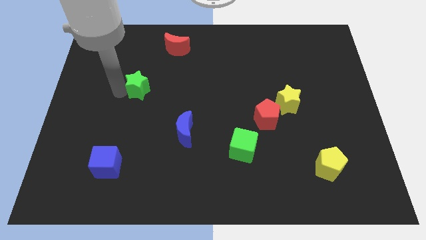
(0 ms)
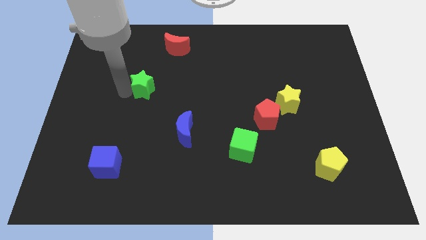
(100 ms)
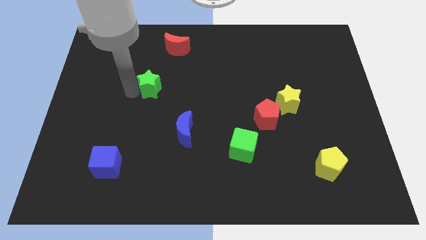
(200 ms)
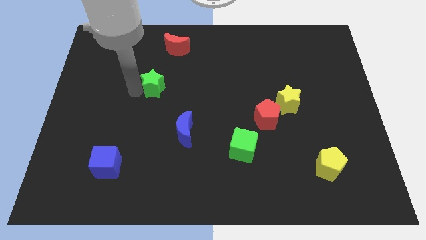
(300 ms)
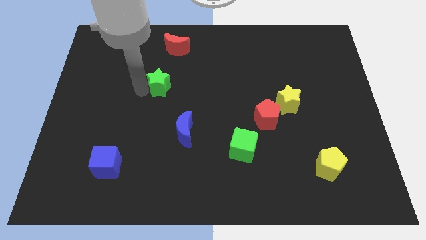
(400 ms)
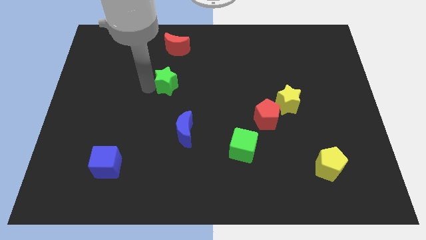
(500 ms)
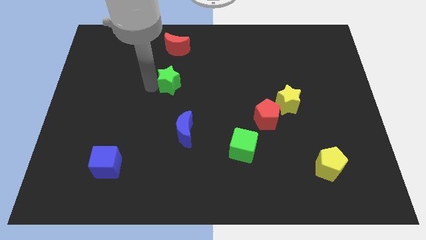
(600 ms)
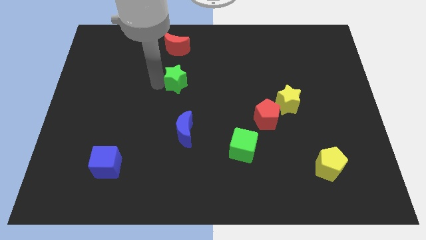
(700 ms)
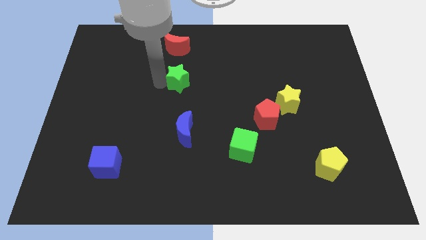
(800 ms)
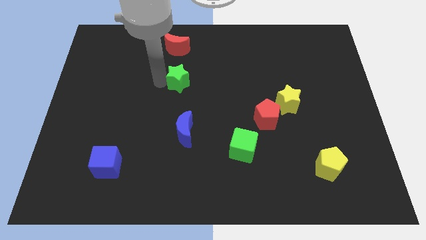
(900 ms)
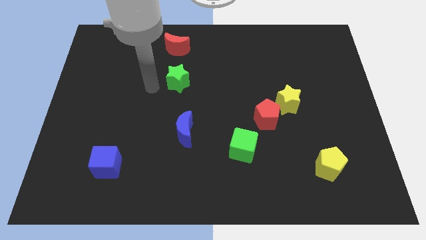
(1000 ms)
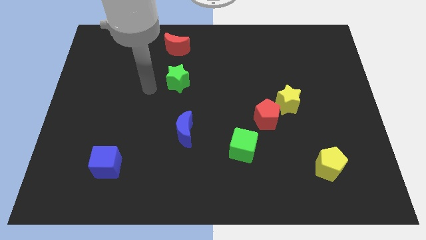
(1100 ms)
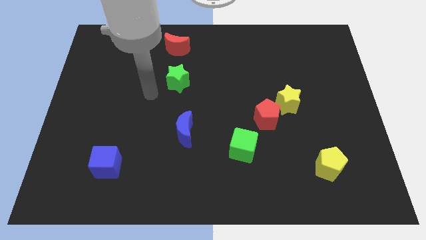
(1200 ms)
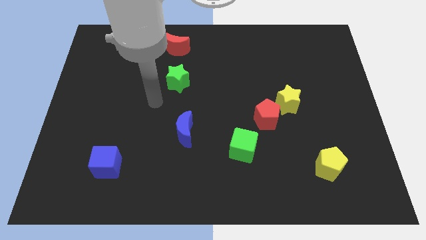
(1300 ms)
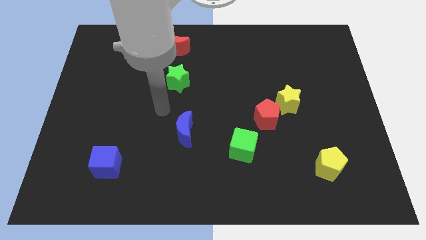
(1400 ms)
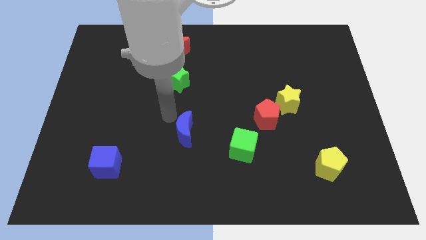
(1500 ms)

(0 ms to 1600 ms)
put the green star in between red and blue moons

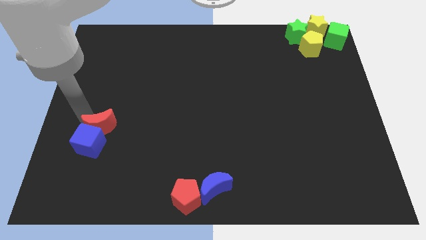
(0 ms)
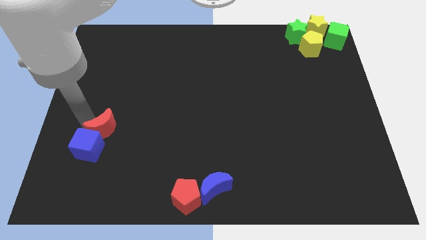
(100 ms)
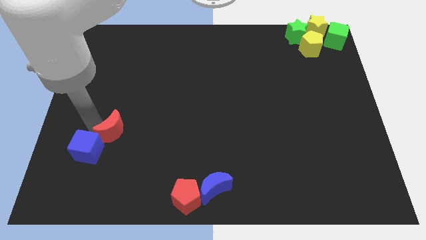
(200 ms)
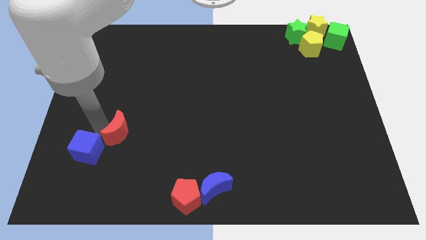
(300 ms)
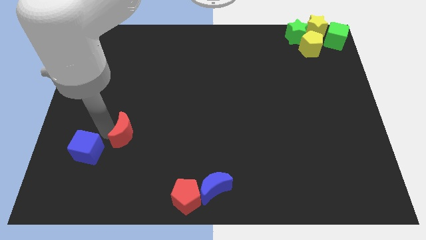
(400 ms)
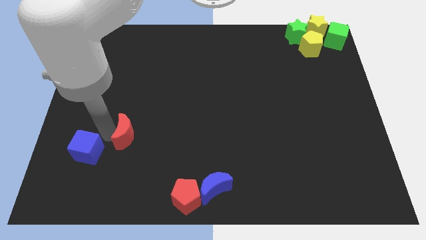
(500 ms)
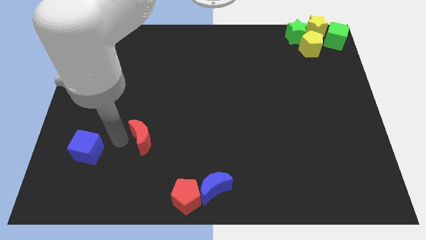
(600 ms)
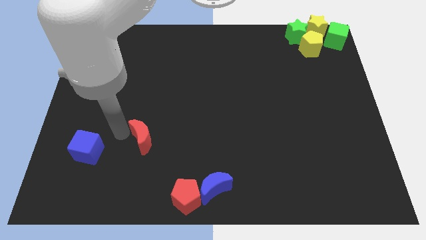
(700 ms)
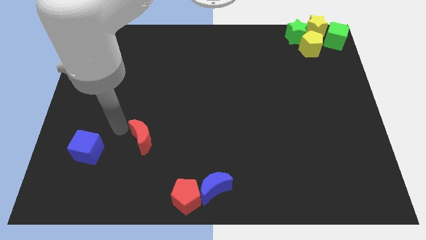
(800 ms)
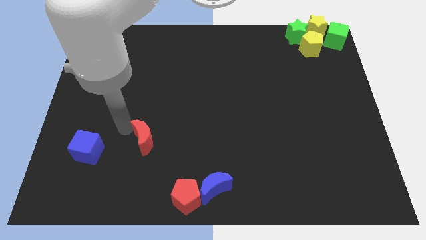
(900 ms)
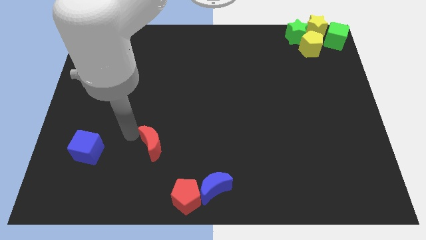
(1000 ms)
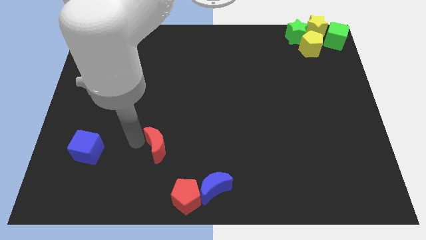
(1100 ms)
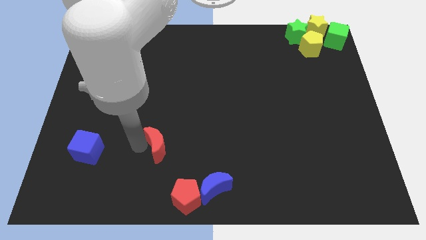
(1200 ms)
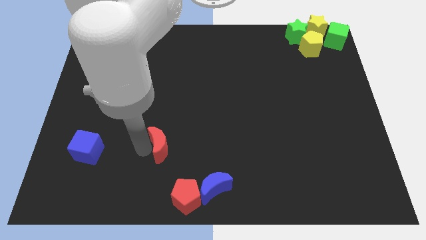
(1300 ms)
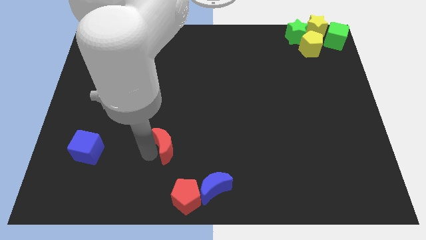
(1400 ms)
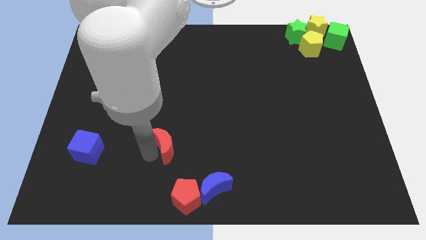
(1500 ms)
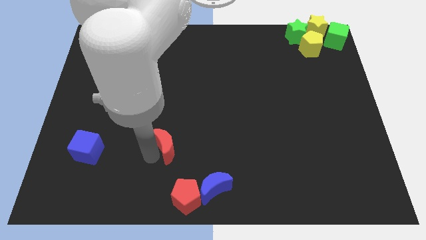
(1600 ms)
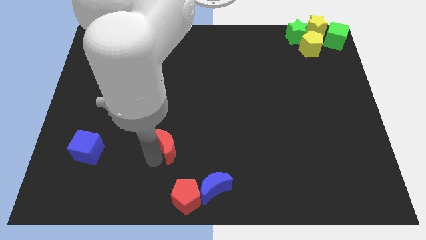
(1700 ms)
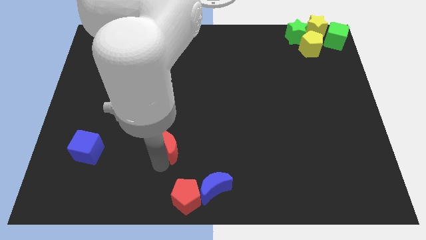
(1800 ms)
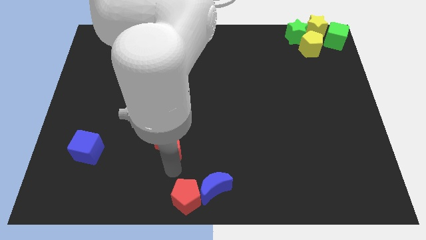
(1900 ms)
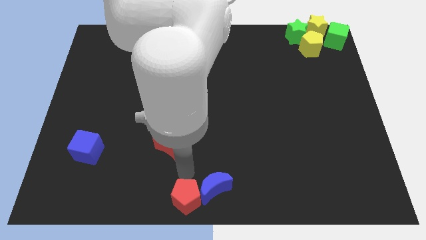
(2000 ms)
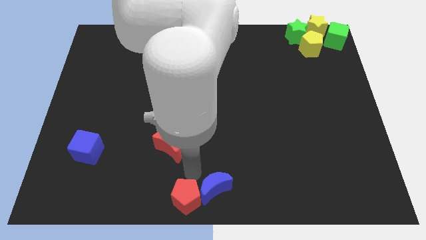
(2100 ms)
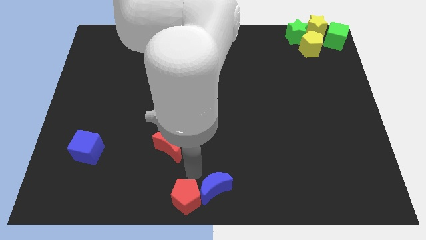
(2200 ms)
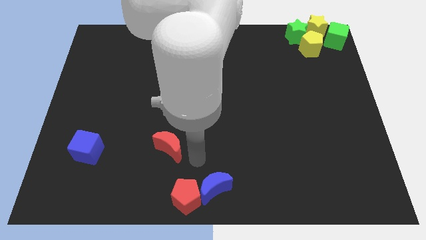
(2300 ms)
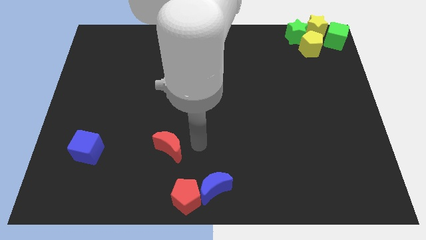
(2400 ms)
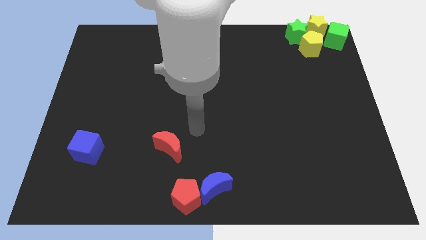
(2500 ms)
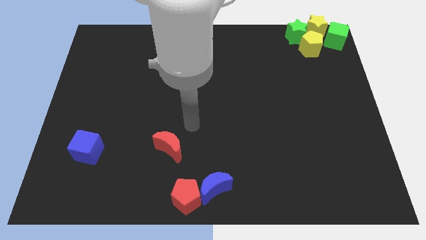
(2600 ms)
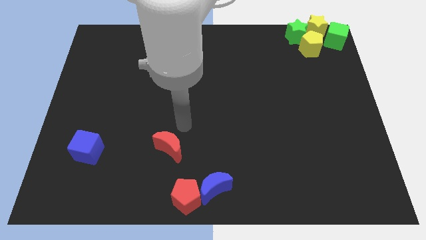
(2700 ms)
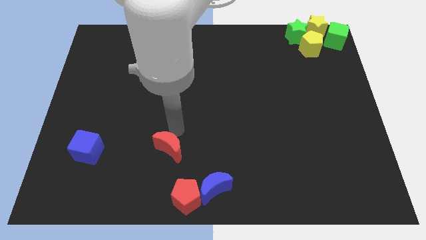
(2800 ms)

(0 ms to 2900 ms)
place the red crescent to the right of the blue cube

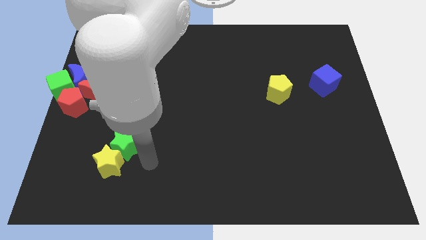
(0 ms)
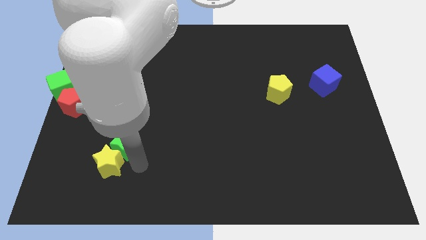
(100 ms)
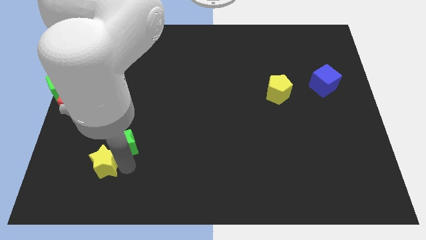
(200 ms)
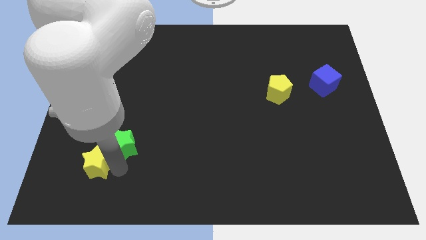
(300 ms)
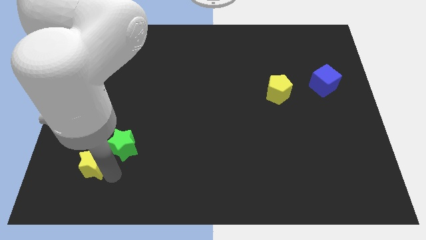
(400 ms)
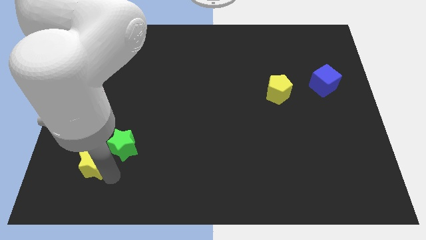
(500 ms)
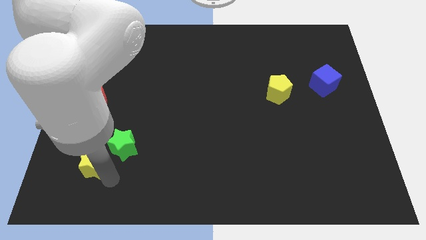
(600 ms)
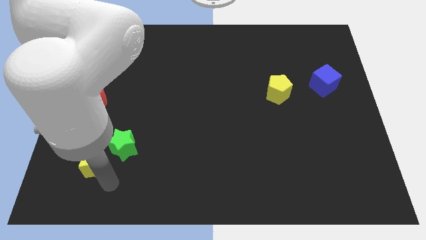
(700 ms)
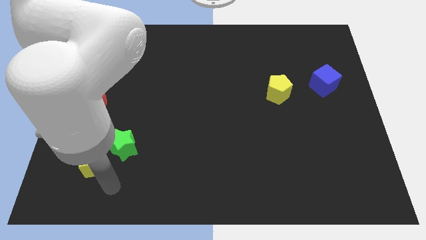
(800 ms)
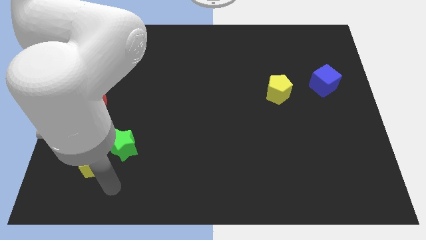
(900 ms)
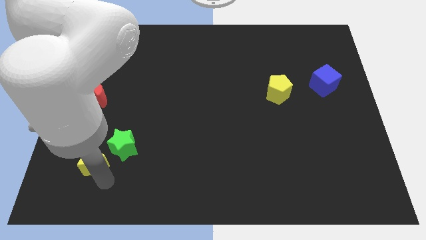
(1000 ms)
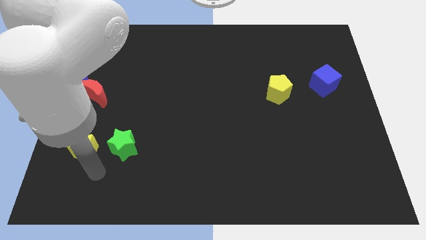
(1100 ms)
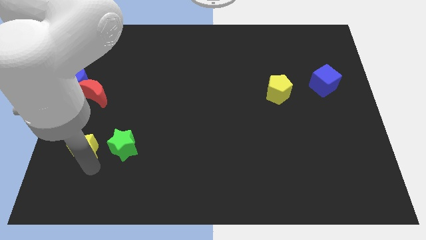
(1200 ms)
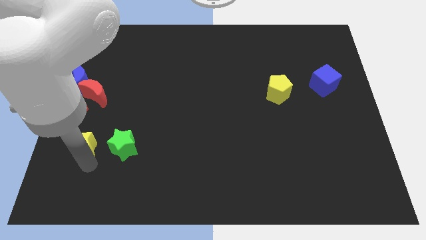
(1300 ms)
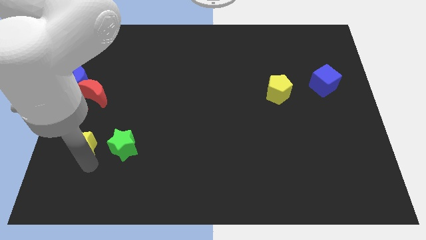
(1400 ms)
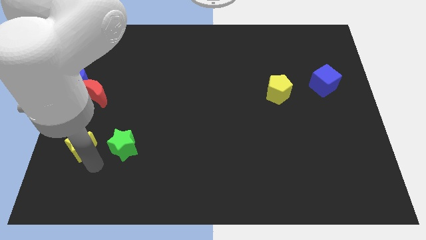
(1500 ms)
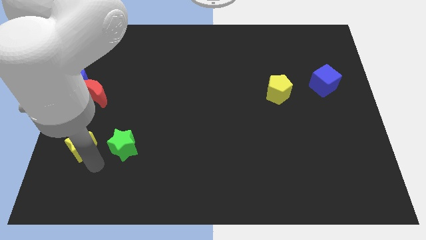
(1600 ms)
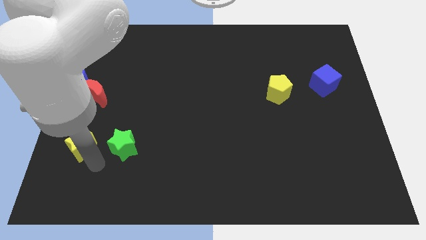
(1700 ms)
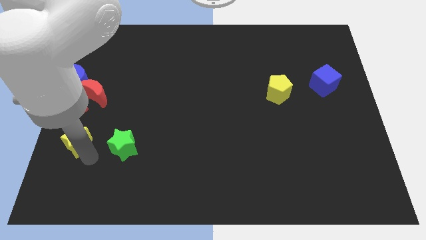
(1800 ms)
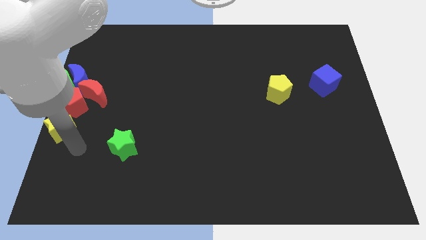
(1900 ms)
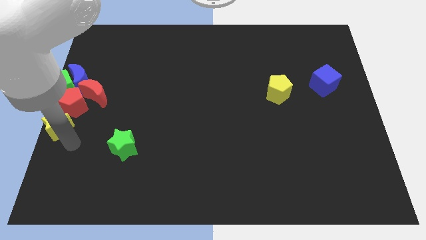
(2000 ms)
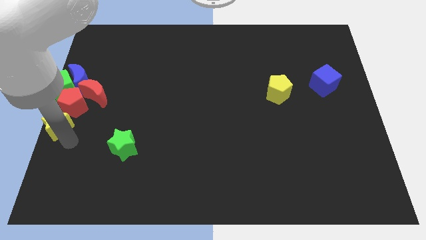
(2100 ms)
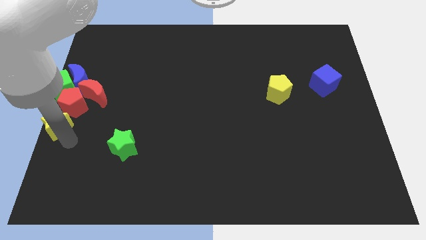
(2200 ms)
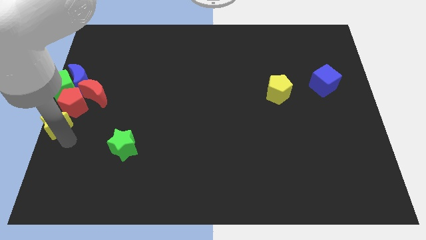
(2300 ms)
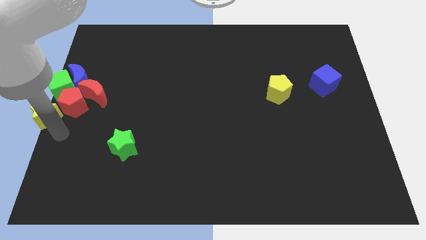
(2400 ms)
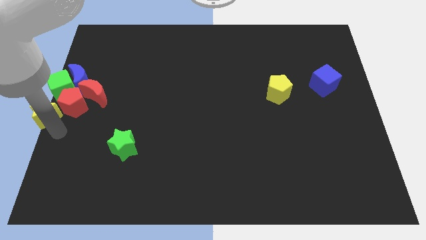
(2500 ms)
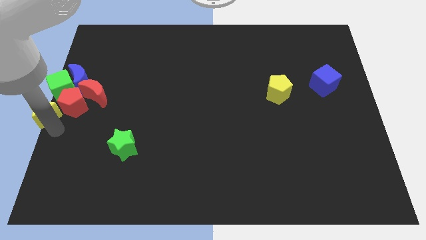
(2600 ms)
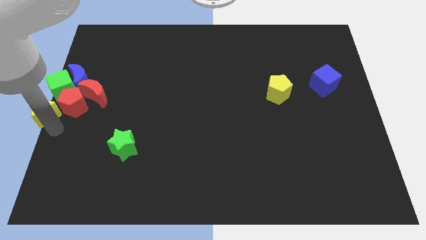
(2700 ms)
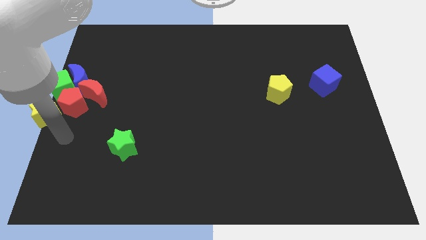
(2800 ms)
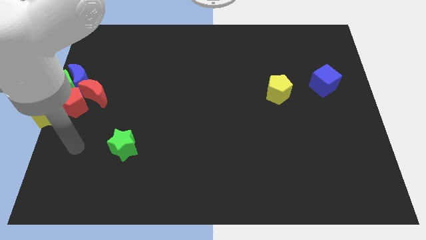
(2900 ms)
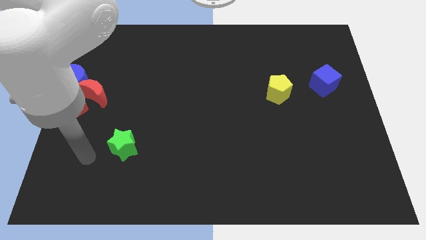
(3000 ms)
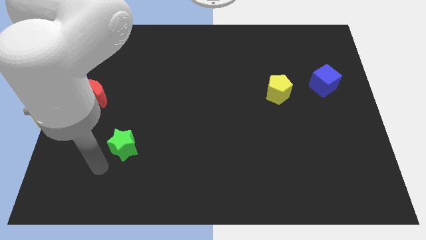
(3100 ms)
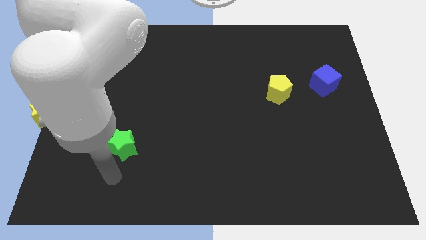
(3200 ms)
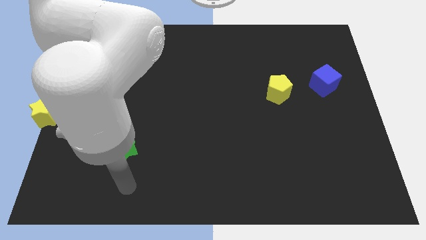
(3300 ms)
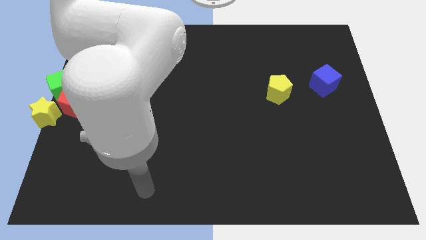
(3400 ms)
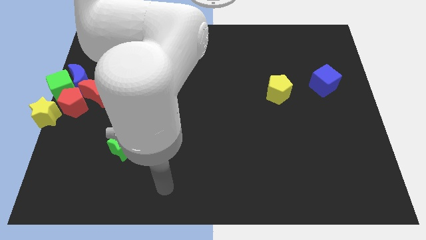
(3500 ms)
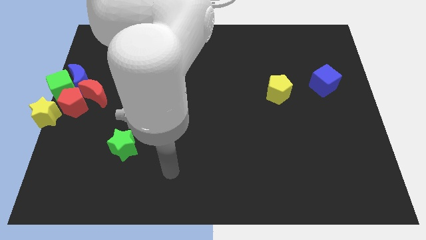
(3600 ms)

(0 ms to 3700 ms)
move the yellow star left beside the red pentagon

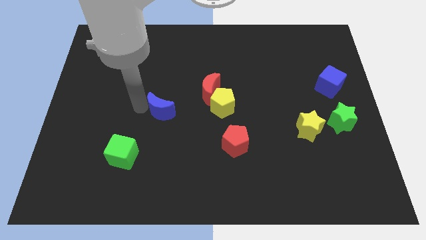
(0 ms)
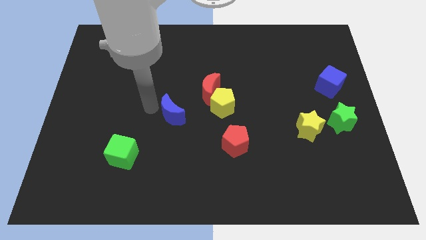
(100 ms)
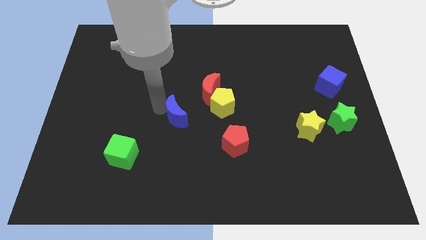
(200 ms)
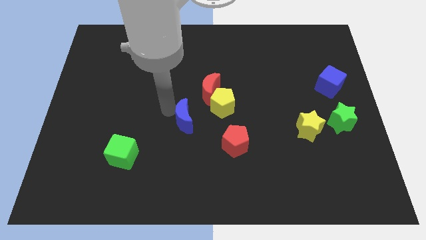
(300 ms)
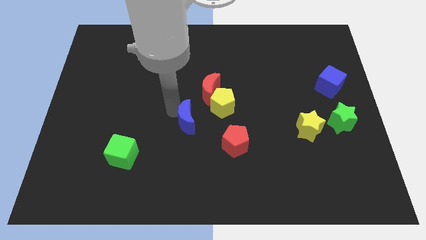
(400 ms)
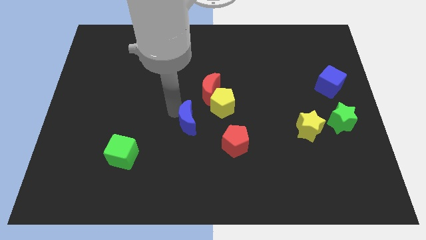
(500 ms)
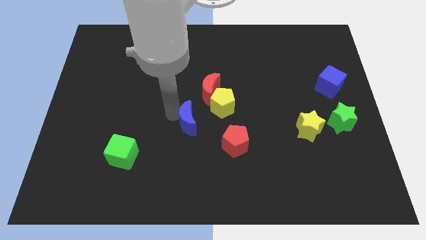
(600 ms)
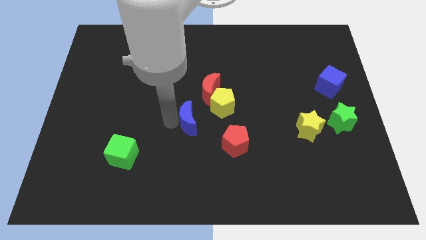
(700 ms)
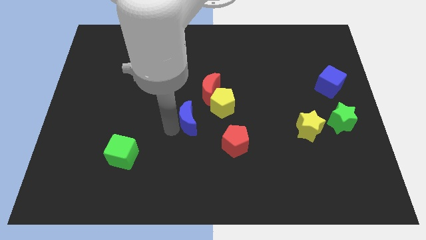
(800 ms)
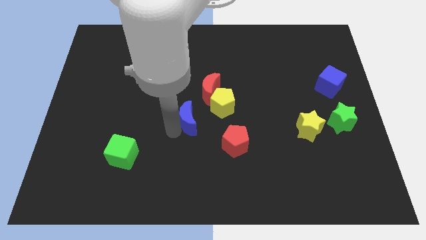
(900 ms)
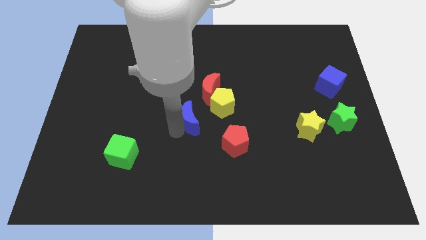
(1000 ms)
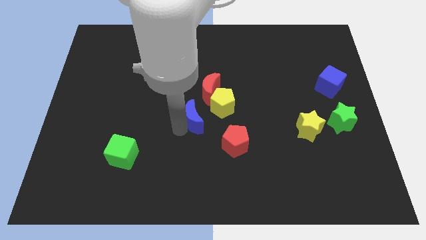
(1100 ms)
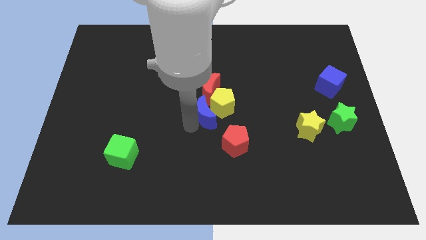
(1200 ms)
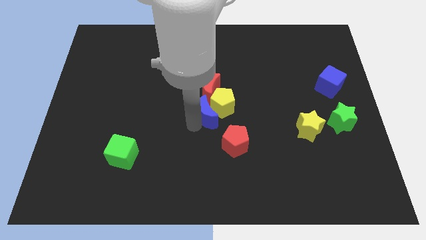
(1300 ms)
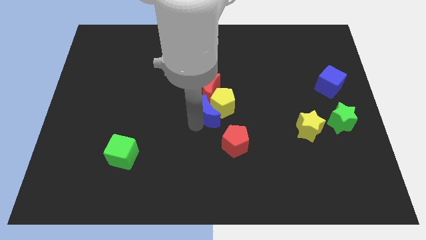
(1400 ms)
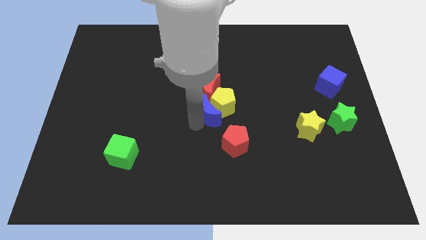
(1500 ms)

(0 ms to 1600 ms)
move the blue crescent into the left side of the yellow pentagon
